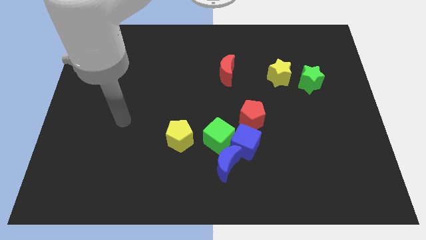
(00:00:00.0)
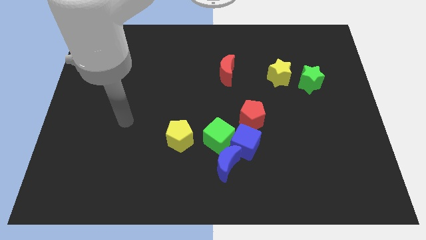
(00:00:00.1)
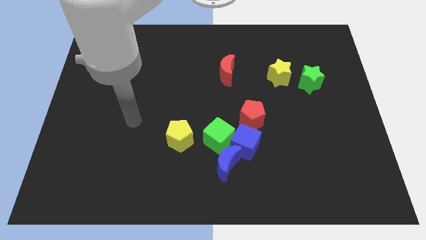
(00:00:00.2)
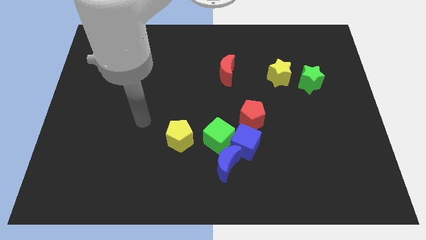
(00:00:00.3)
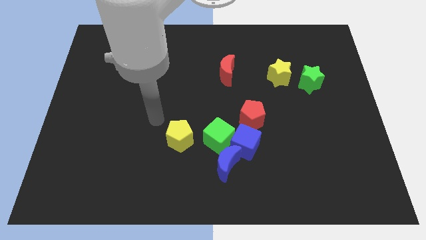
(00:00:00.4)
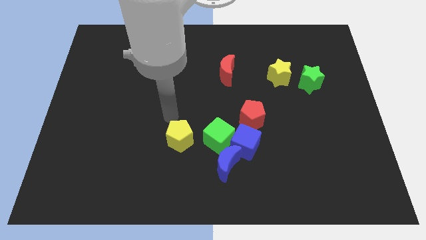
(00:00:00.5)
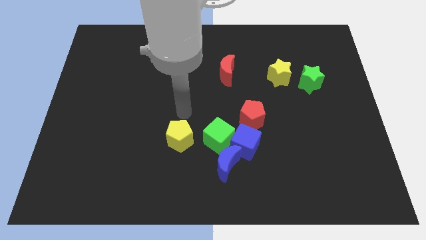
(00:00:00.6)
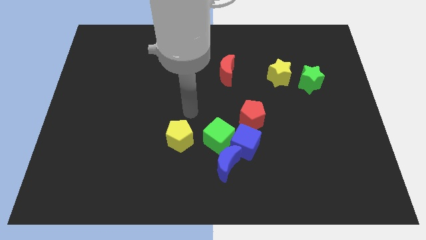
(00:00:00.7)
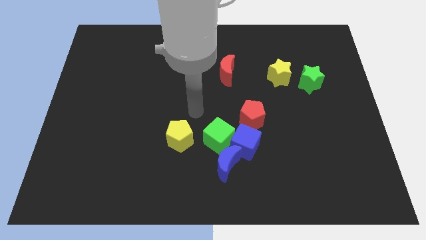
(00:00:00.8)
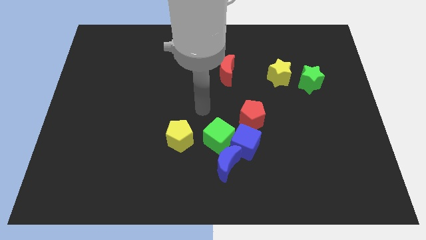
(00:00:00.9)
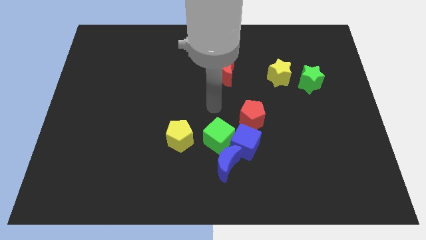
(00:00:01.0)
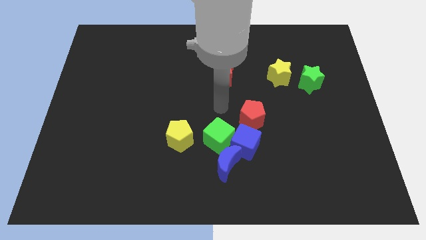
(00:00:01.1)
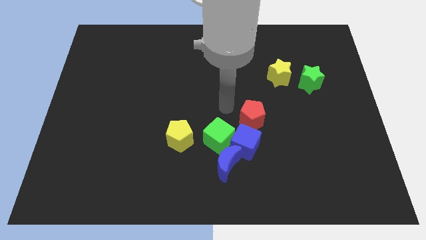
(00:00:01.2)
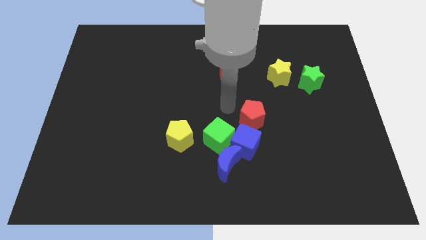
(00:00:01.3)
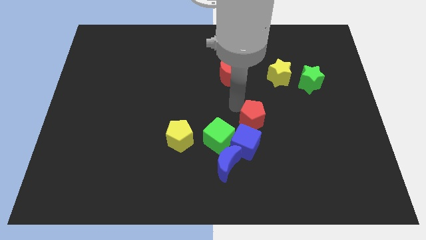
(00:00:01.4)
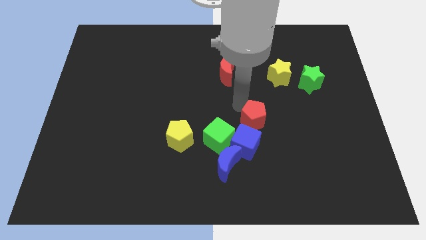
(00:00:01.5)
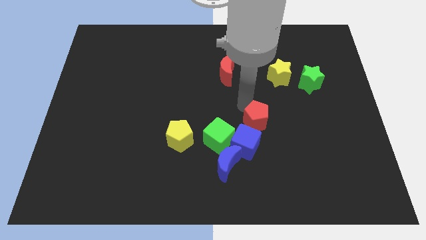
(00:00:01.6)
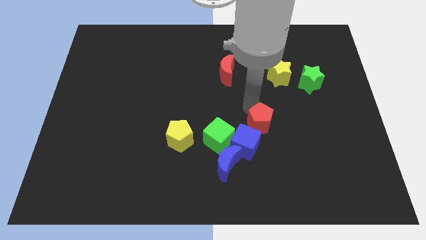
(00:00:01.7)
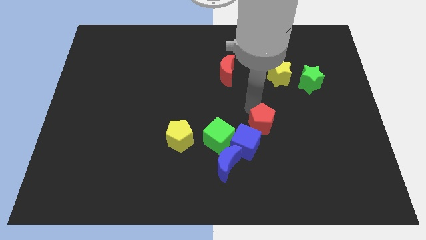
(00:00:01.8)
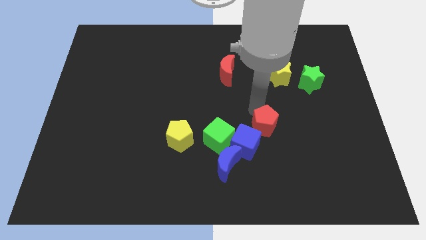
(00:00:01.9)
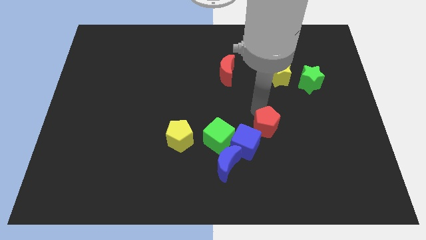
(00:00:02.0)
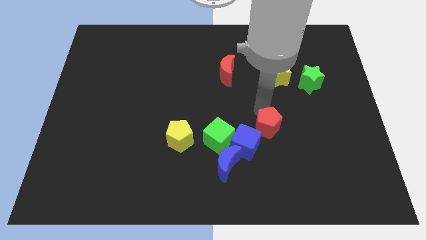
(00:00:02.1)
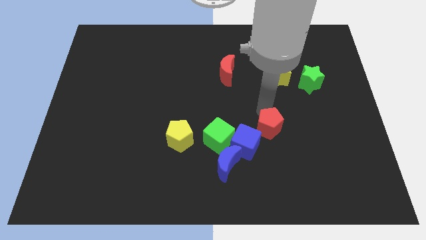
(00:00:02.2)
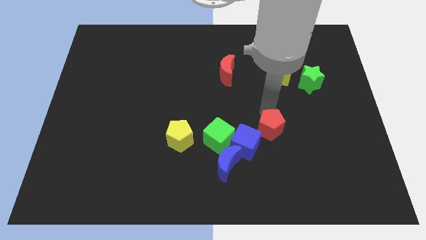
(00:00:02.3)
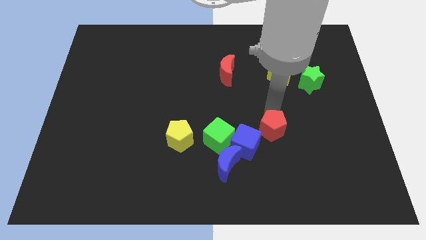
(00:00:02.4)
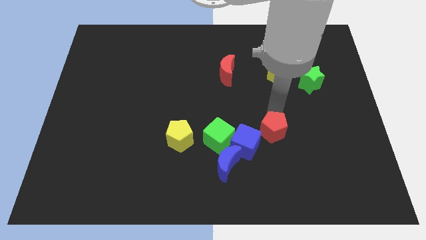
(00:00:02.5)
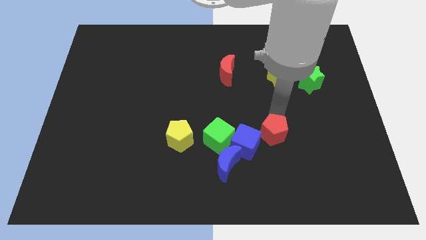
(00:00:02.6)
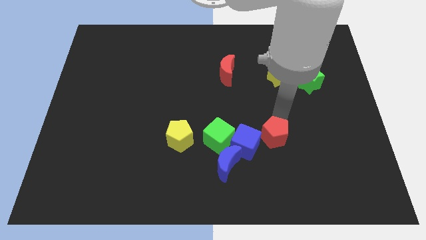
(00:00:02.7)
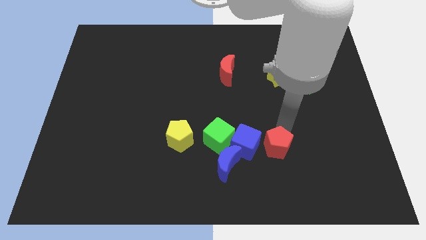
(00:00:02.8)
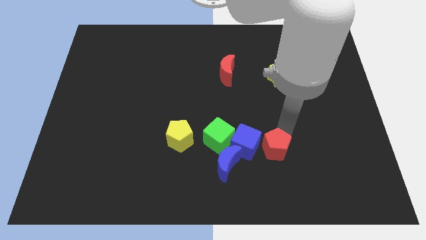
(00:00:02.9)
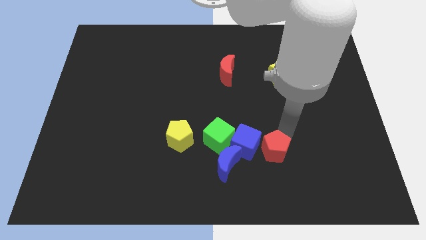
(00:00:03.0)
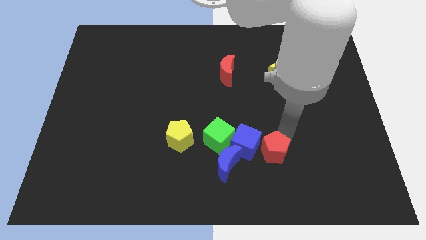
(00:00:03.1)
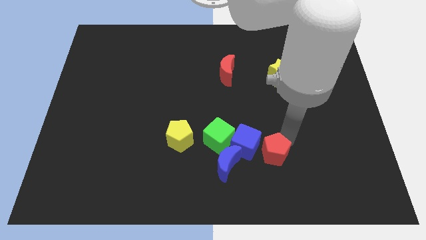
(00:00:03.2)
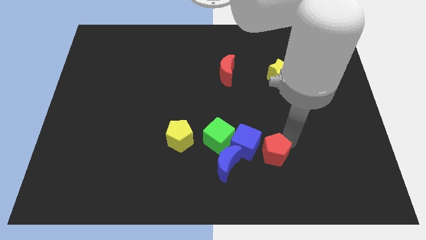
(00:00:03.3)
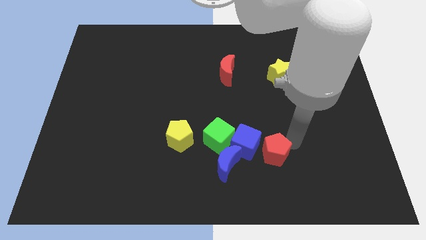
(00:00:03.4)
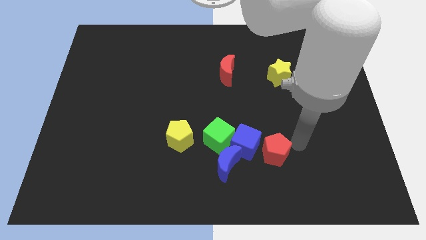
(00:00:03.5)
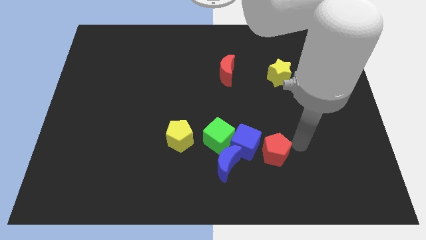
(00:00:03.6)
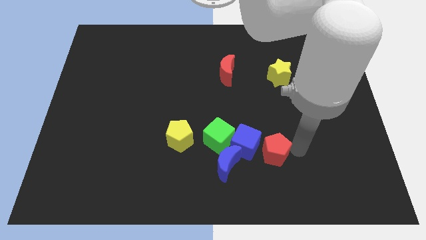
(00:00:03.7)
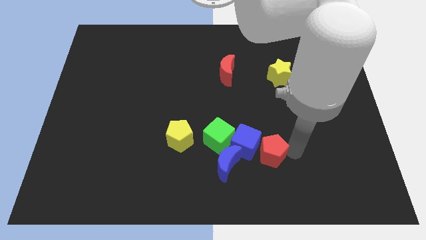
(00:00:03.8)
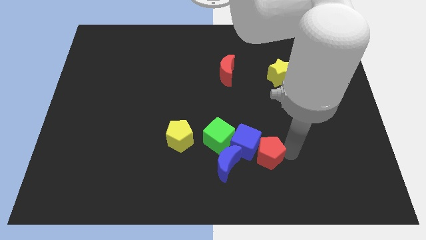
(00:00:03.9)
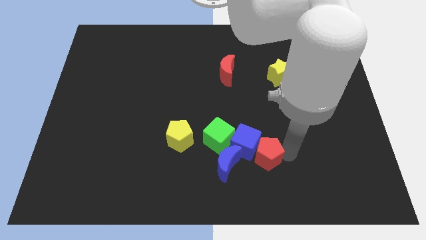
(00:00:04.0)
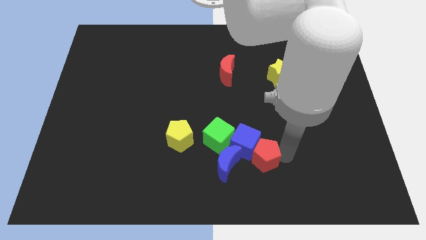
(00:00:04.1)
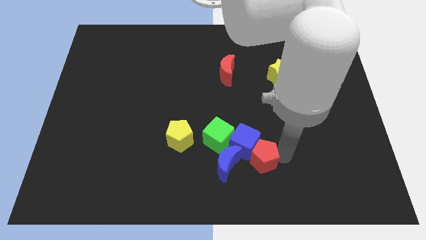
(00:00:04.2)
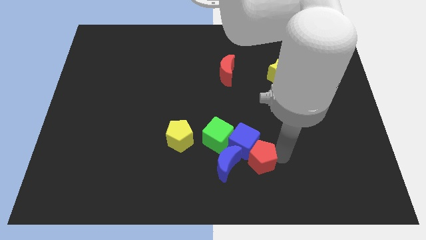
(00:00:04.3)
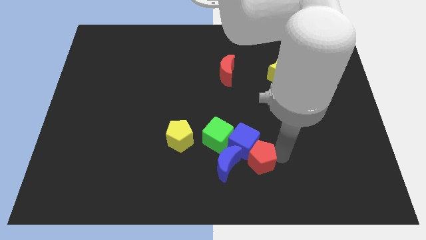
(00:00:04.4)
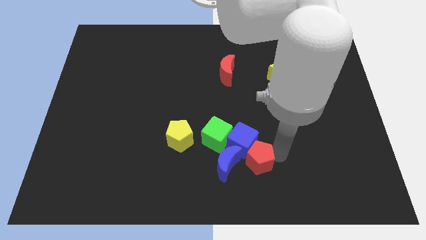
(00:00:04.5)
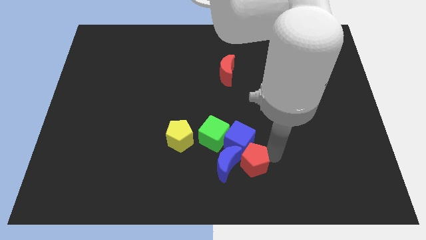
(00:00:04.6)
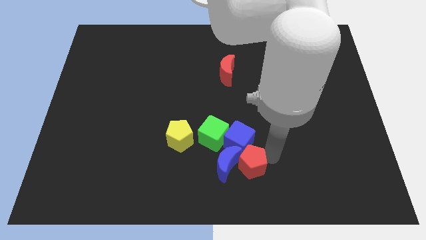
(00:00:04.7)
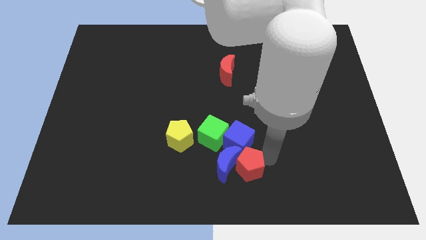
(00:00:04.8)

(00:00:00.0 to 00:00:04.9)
slide the red pentagon to the blue moon

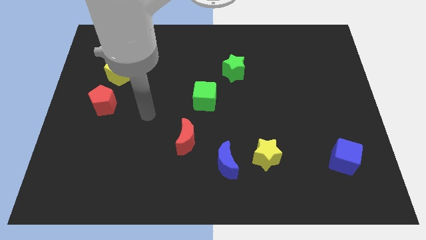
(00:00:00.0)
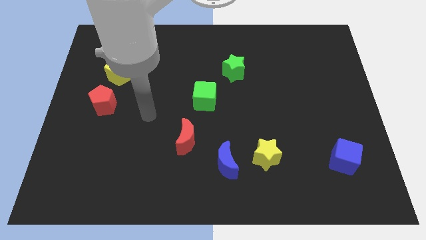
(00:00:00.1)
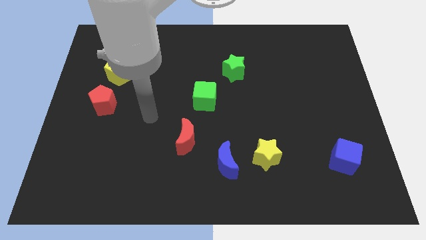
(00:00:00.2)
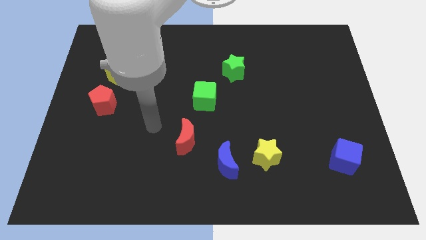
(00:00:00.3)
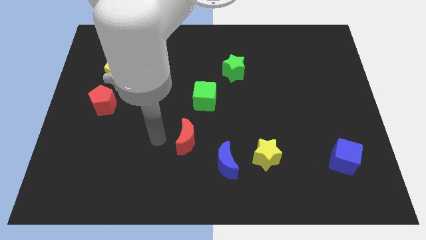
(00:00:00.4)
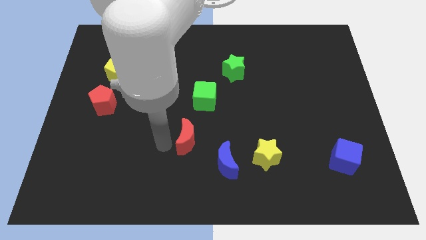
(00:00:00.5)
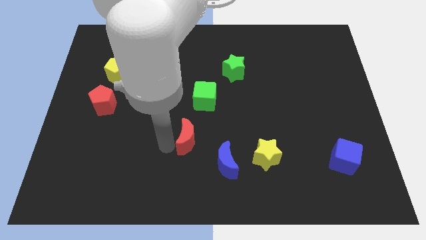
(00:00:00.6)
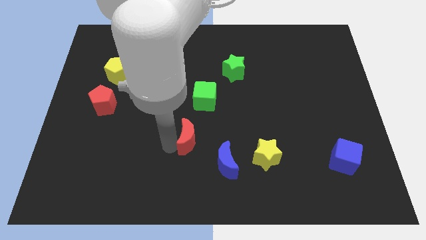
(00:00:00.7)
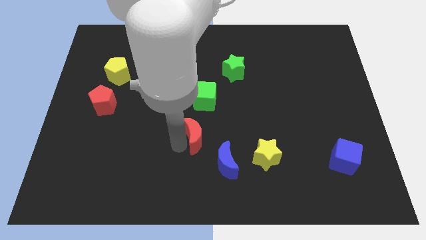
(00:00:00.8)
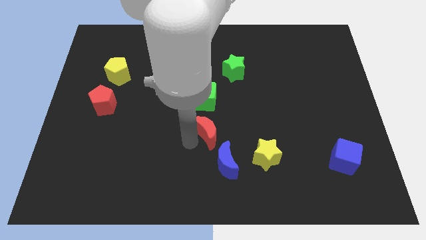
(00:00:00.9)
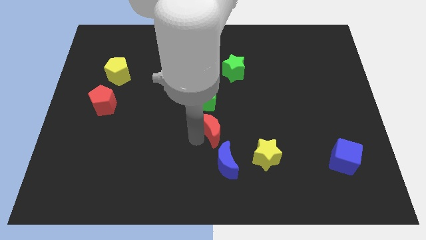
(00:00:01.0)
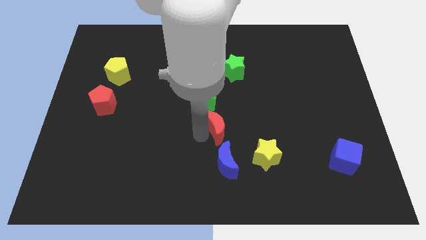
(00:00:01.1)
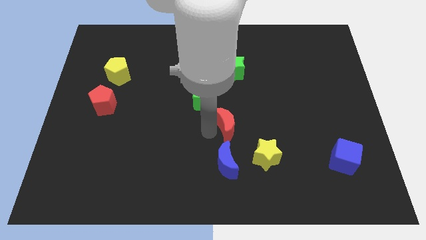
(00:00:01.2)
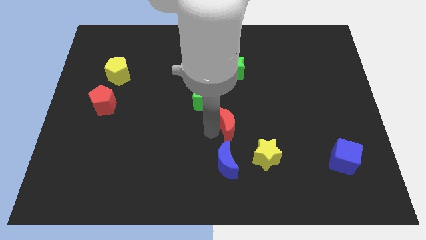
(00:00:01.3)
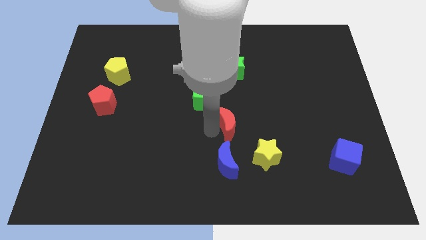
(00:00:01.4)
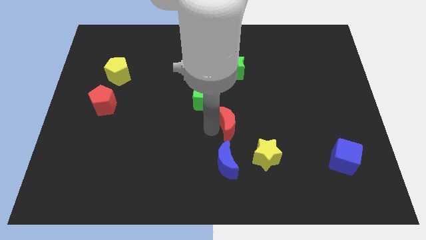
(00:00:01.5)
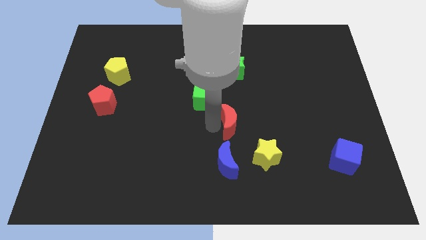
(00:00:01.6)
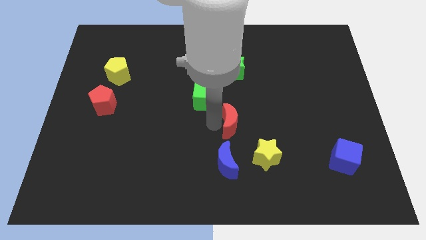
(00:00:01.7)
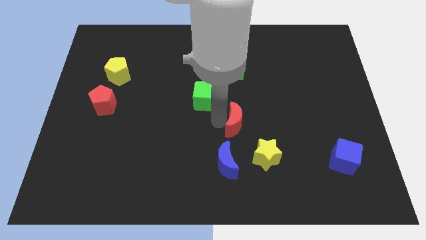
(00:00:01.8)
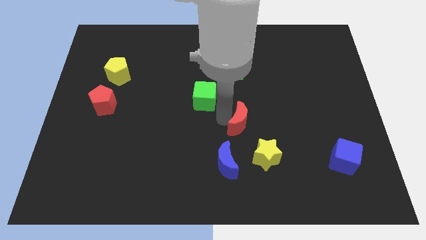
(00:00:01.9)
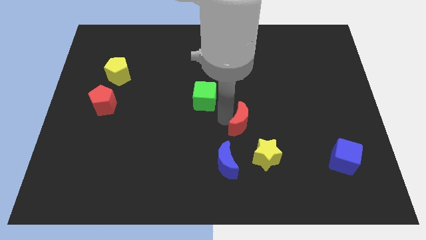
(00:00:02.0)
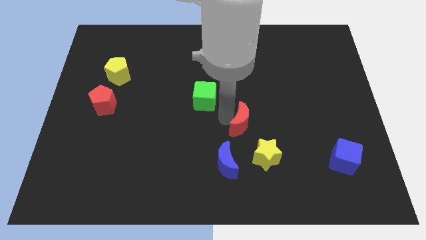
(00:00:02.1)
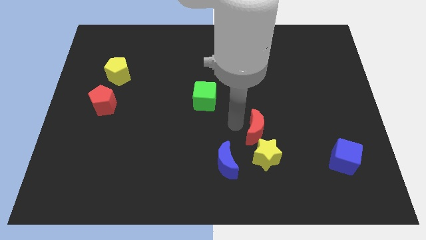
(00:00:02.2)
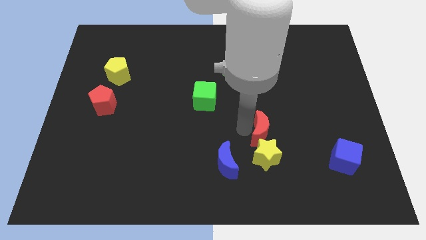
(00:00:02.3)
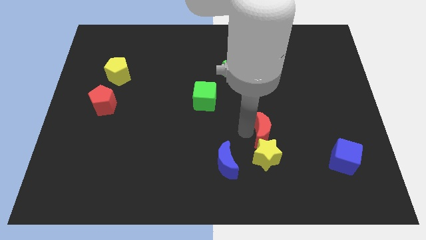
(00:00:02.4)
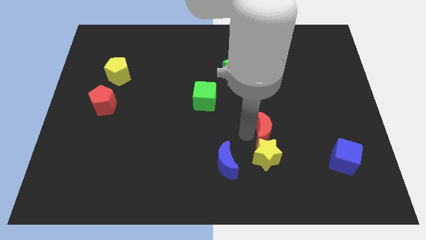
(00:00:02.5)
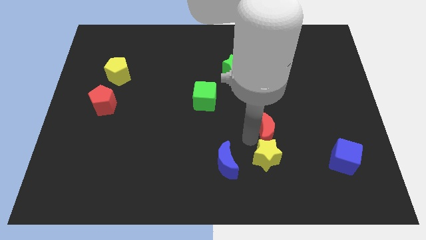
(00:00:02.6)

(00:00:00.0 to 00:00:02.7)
push the red moon towards the yellow star

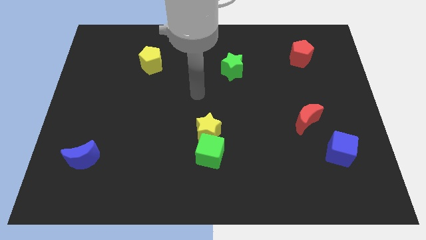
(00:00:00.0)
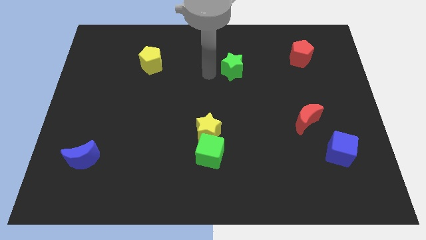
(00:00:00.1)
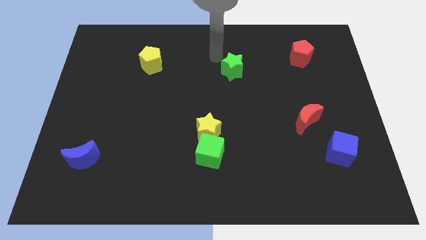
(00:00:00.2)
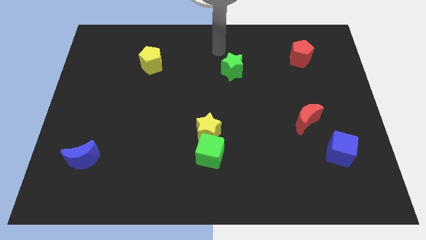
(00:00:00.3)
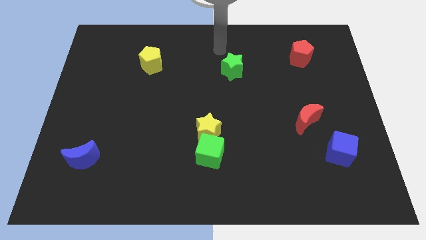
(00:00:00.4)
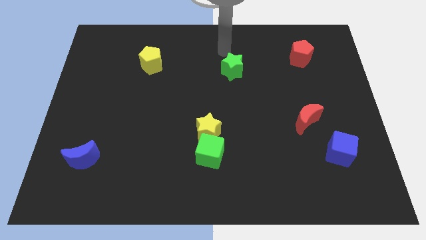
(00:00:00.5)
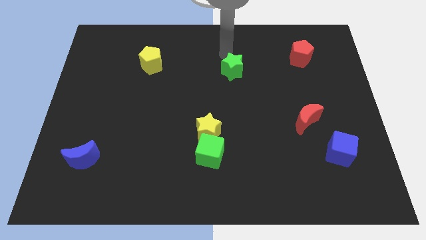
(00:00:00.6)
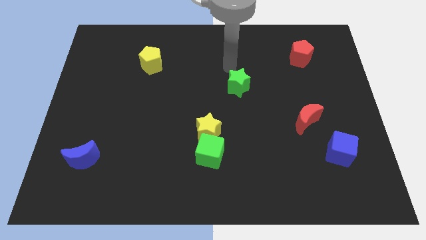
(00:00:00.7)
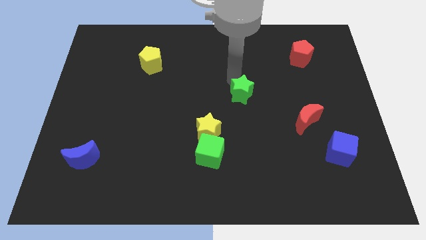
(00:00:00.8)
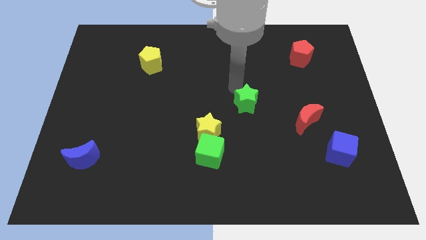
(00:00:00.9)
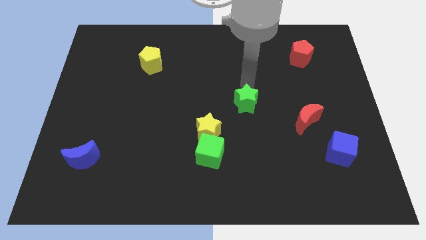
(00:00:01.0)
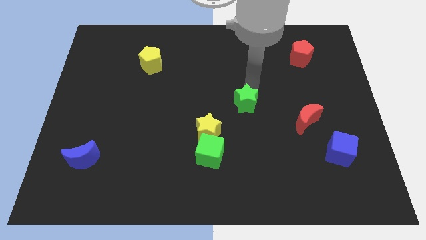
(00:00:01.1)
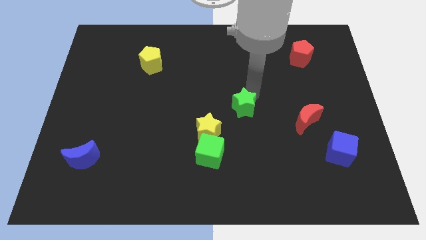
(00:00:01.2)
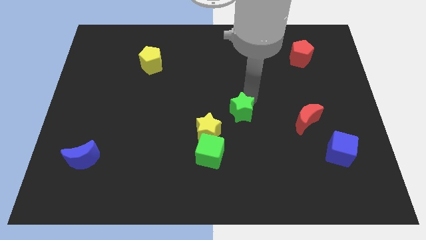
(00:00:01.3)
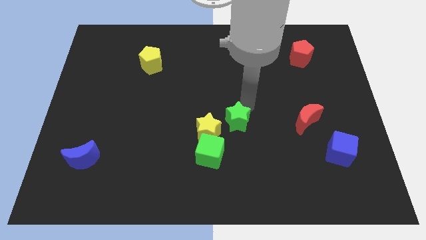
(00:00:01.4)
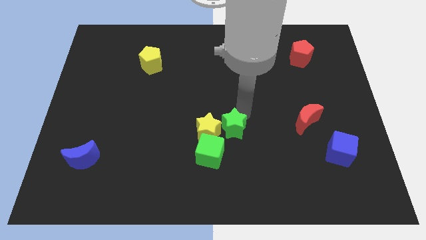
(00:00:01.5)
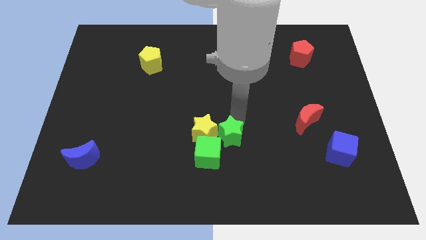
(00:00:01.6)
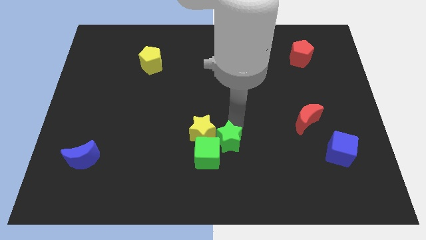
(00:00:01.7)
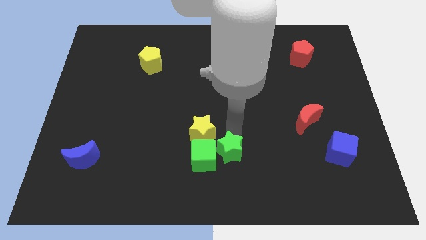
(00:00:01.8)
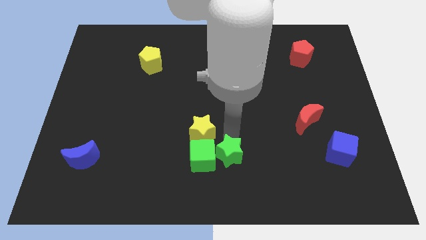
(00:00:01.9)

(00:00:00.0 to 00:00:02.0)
move the green star close to the green cube
